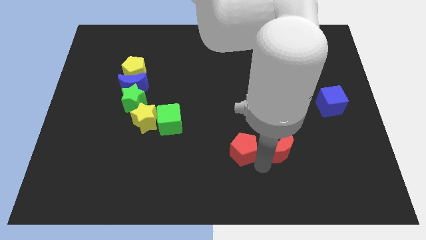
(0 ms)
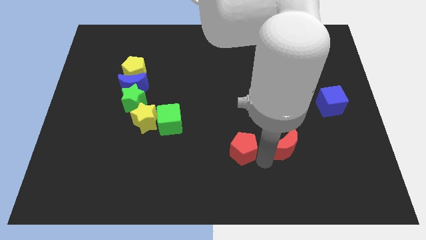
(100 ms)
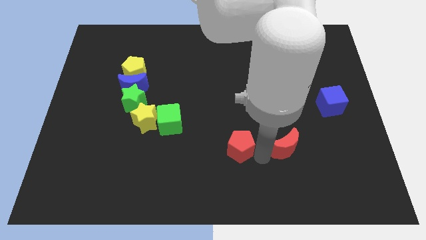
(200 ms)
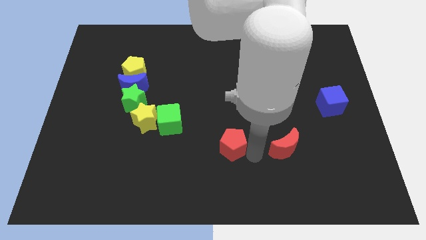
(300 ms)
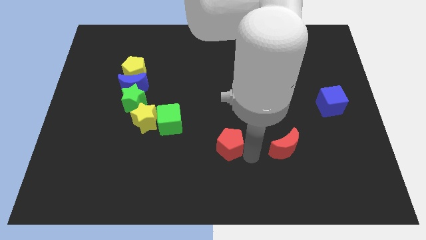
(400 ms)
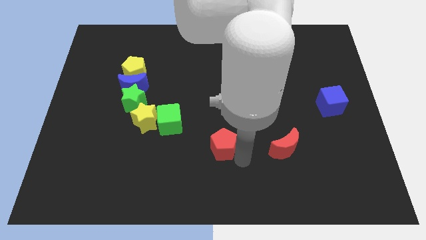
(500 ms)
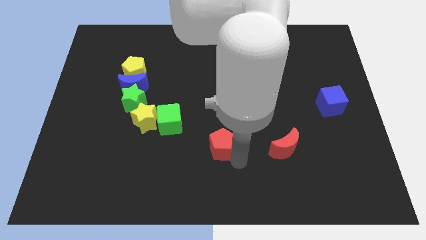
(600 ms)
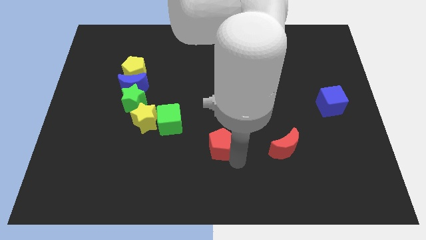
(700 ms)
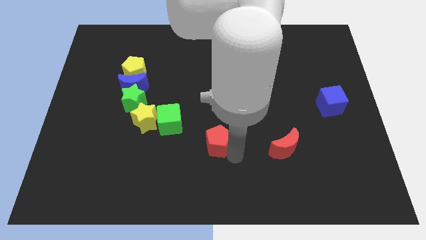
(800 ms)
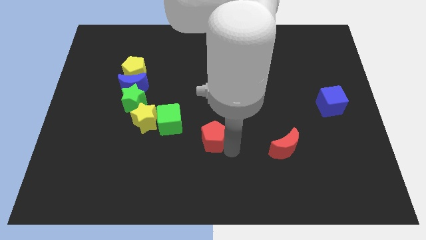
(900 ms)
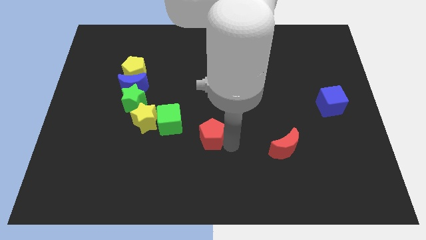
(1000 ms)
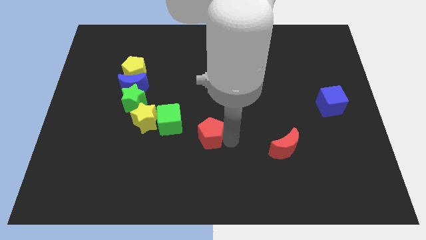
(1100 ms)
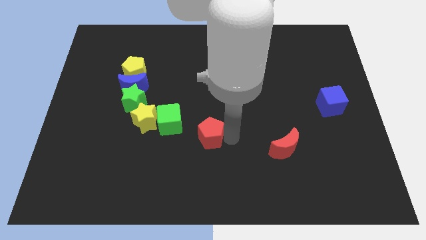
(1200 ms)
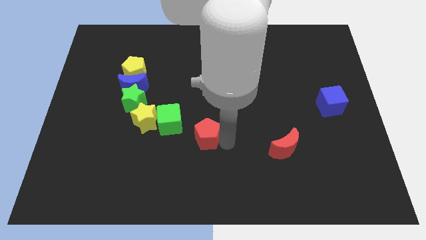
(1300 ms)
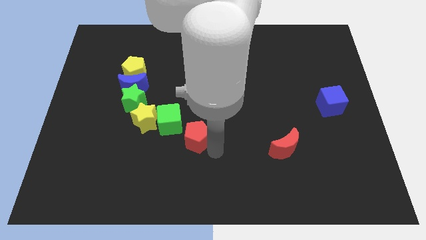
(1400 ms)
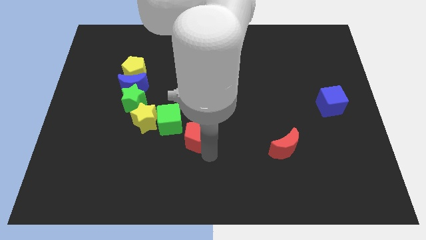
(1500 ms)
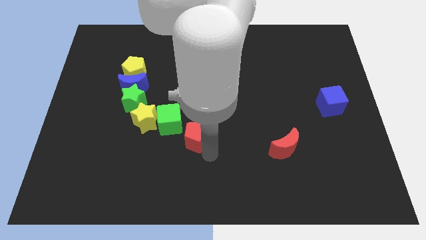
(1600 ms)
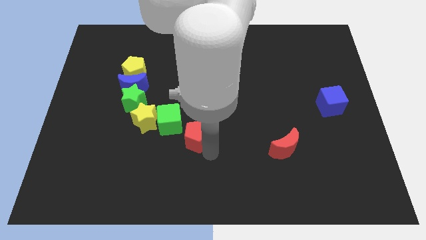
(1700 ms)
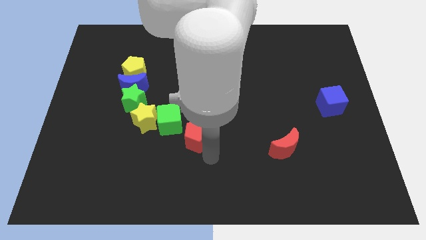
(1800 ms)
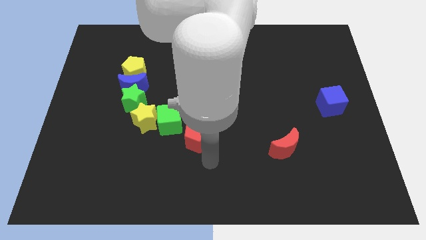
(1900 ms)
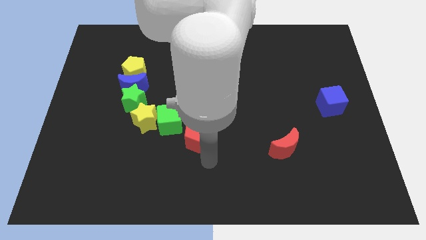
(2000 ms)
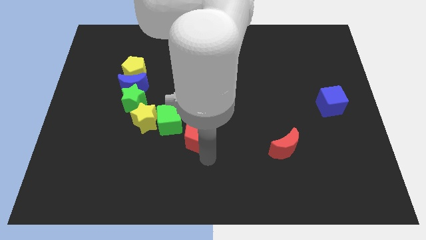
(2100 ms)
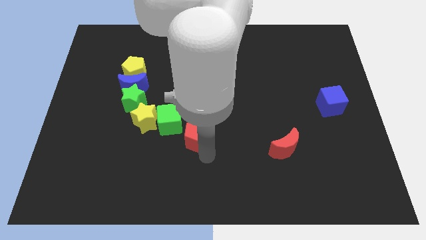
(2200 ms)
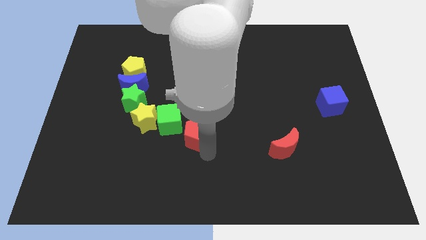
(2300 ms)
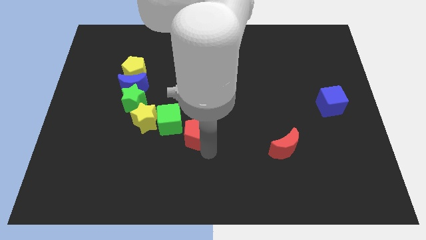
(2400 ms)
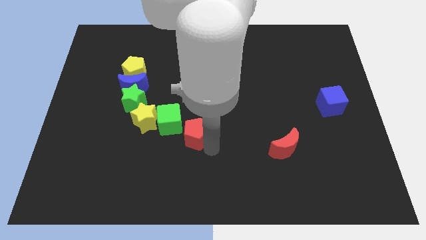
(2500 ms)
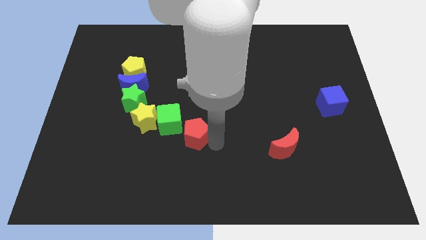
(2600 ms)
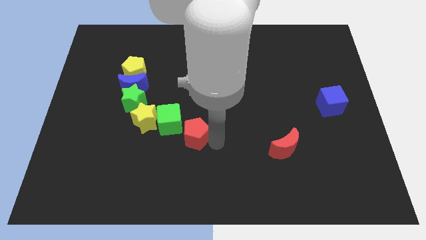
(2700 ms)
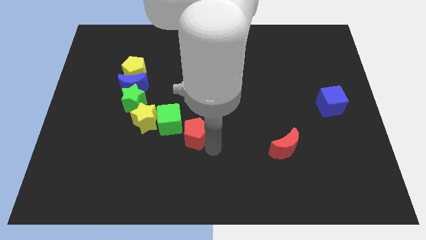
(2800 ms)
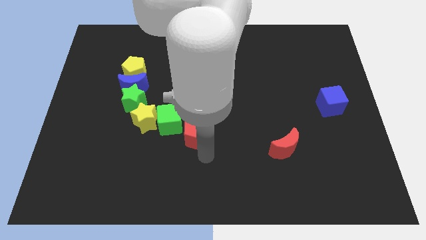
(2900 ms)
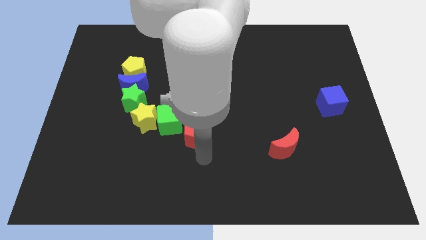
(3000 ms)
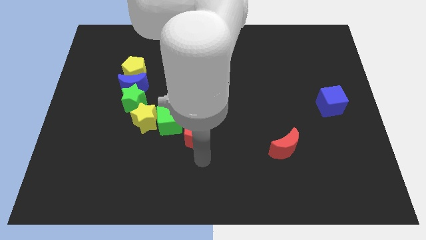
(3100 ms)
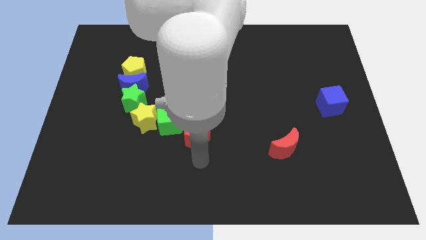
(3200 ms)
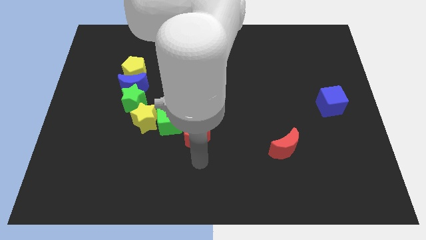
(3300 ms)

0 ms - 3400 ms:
place the red pentagon at the bottom right side of the green cube

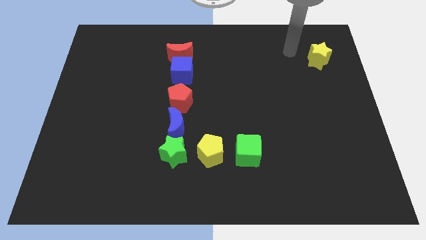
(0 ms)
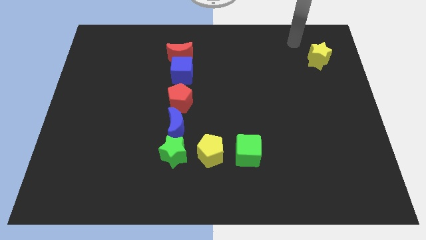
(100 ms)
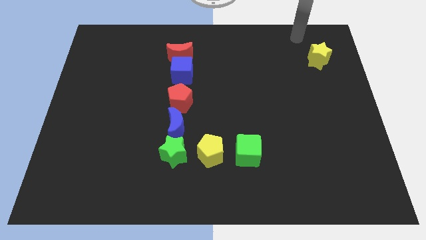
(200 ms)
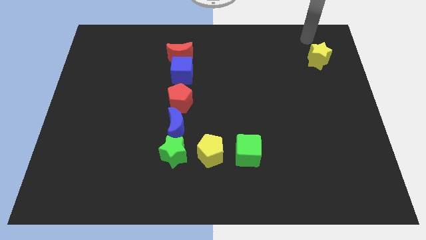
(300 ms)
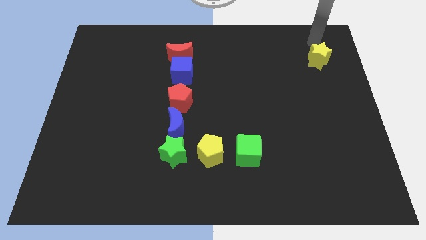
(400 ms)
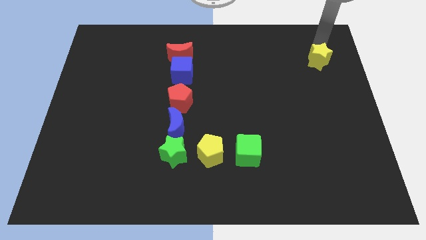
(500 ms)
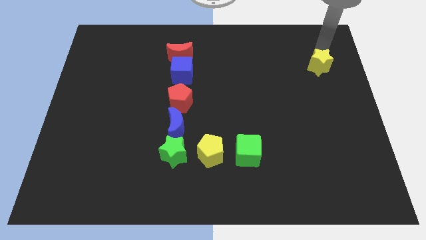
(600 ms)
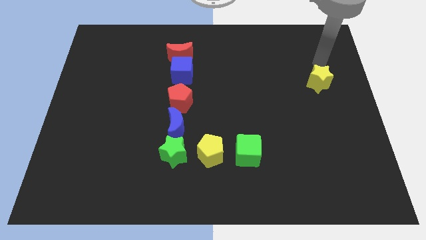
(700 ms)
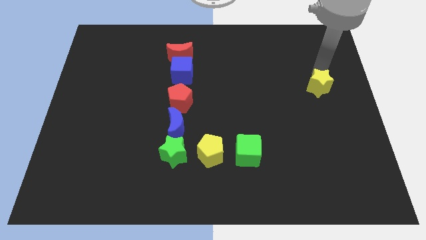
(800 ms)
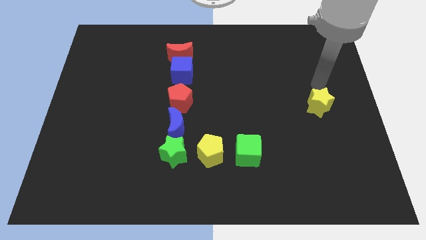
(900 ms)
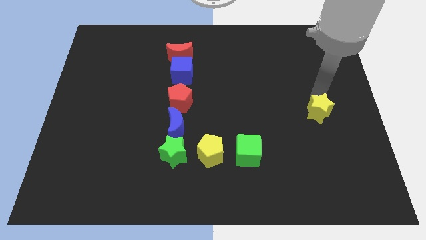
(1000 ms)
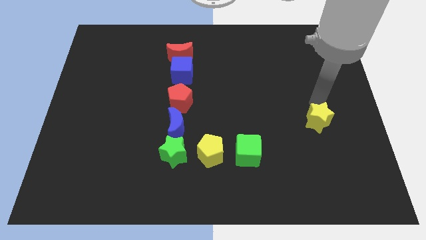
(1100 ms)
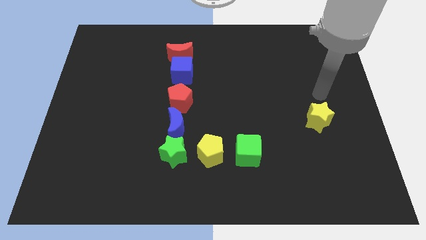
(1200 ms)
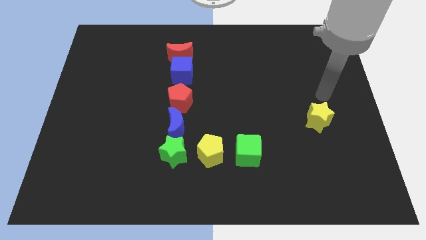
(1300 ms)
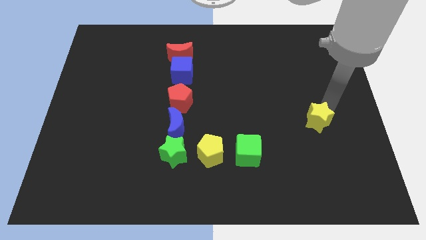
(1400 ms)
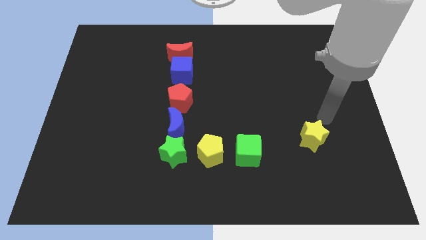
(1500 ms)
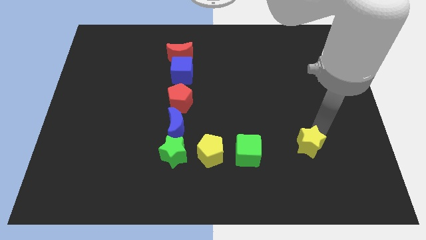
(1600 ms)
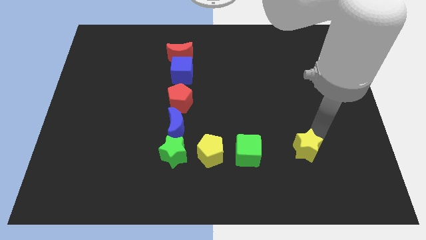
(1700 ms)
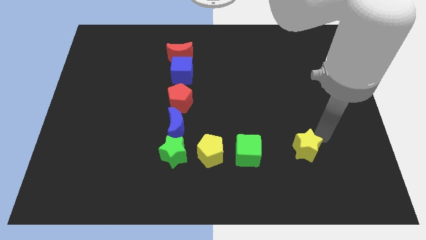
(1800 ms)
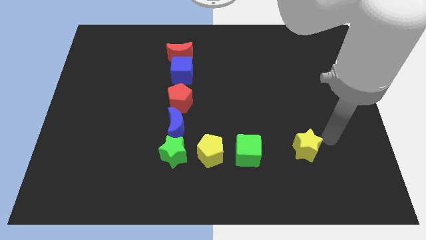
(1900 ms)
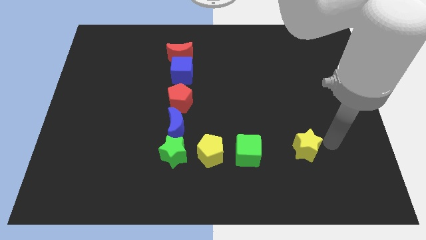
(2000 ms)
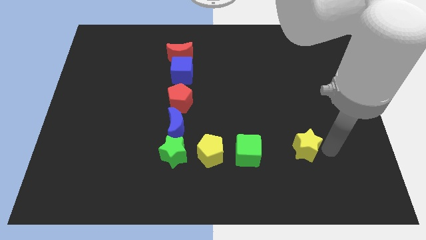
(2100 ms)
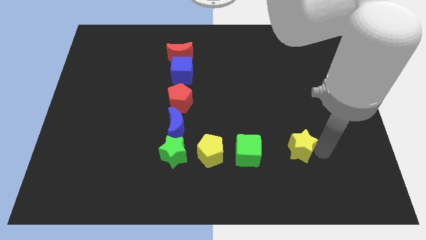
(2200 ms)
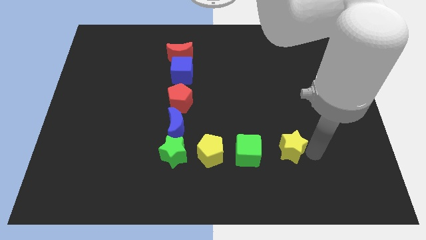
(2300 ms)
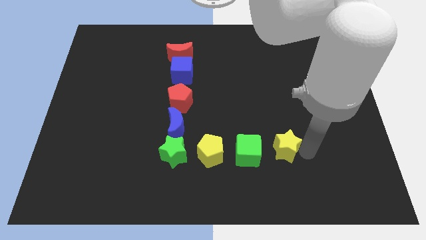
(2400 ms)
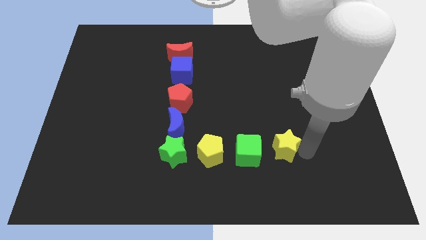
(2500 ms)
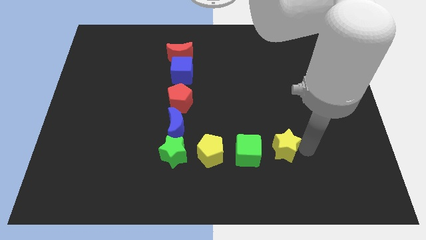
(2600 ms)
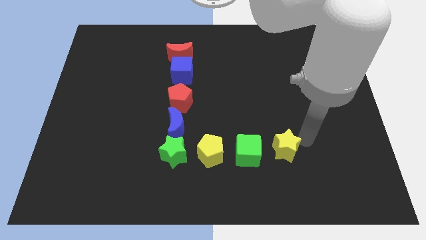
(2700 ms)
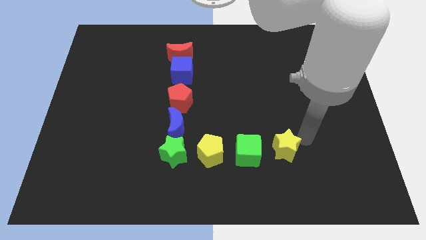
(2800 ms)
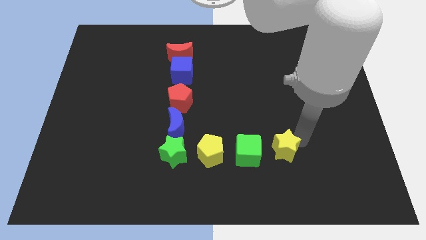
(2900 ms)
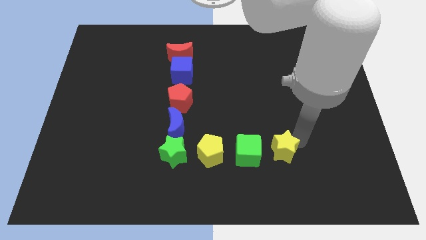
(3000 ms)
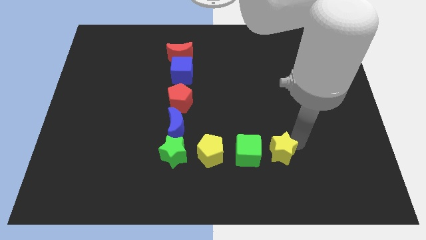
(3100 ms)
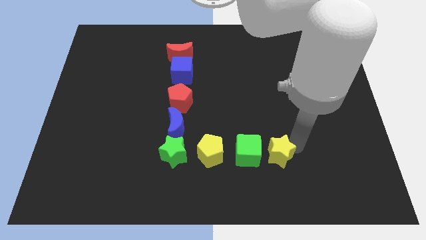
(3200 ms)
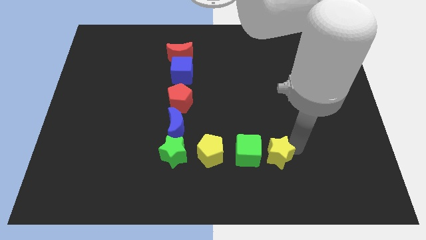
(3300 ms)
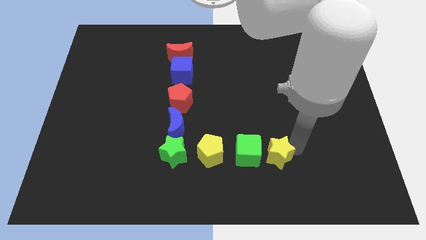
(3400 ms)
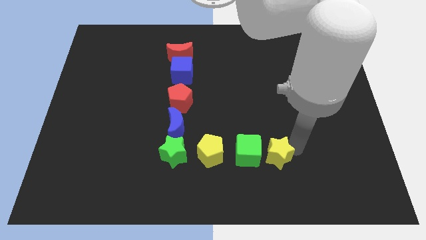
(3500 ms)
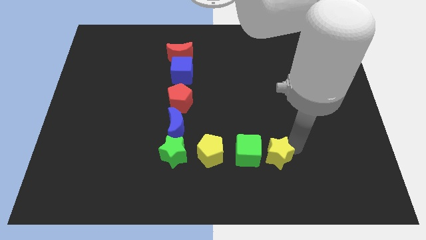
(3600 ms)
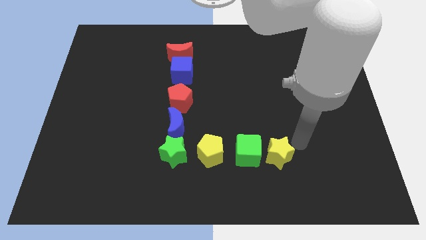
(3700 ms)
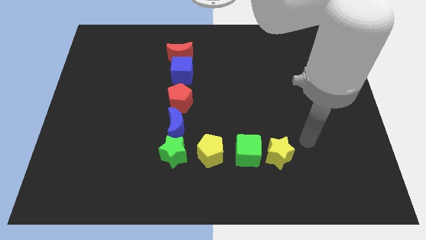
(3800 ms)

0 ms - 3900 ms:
push the yellow star to the right of the green cube

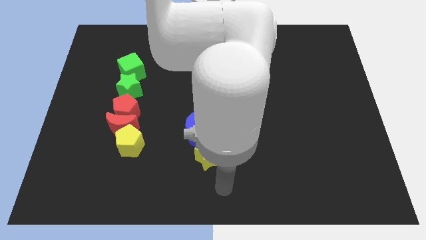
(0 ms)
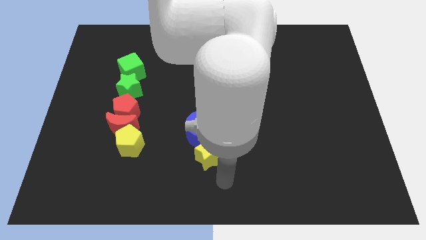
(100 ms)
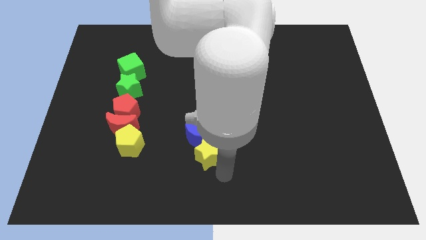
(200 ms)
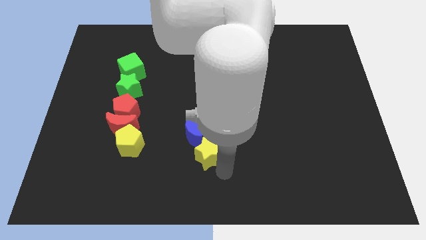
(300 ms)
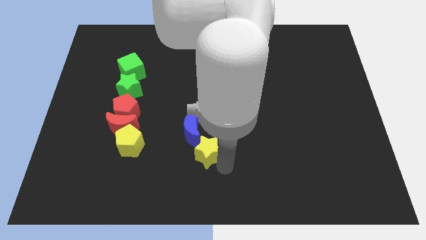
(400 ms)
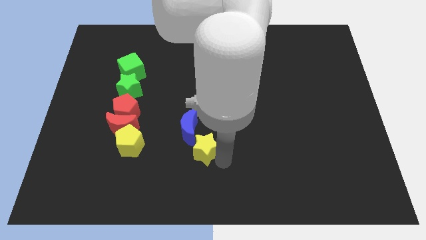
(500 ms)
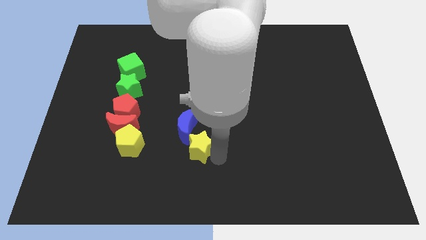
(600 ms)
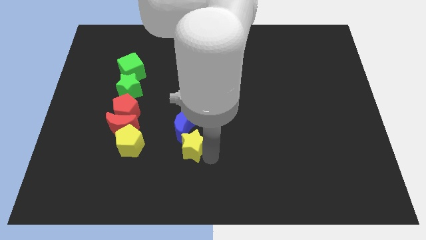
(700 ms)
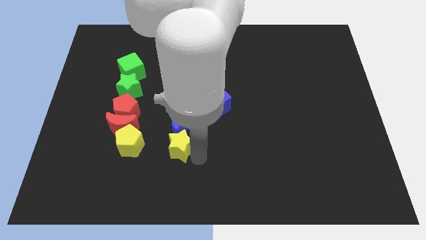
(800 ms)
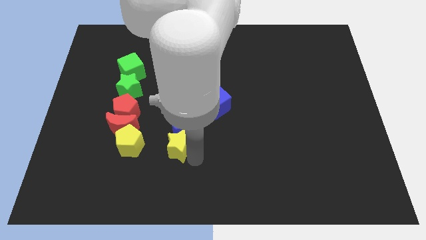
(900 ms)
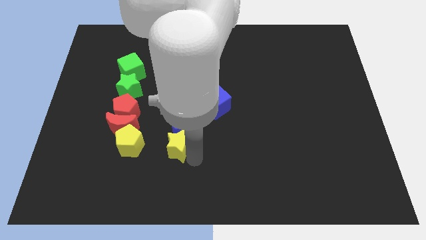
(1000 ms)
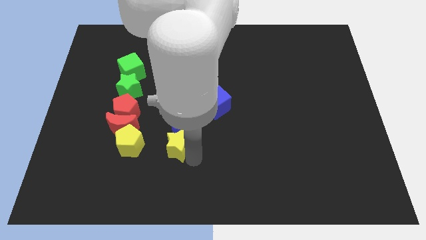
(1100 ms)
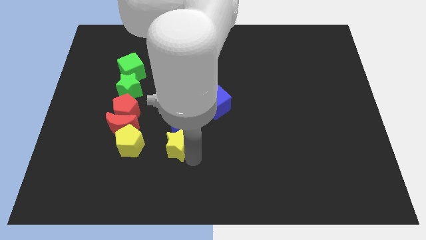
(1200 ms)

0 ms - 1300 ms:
drag the yellow star to the left

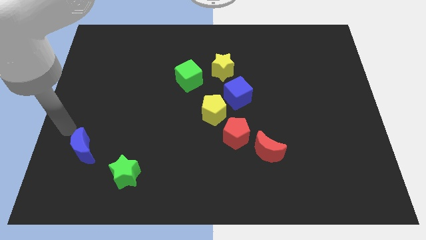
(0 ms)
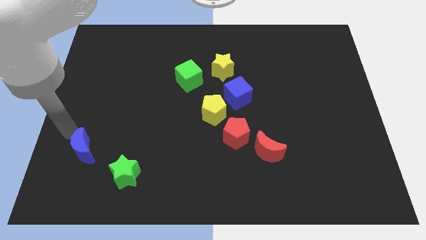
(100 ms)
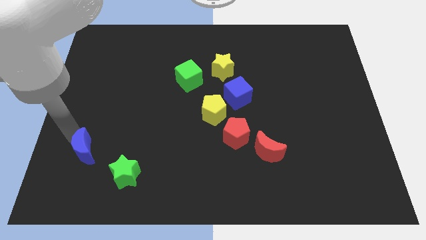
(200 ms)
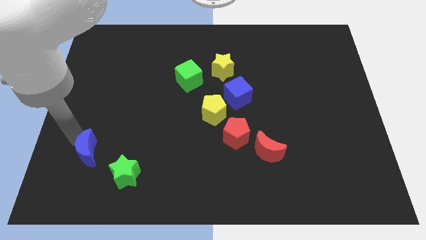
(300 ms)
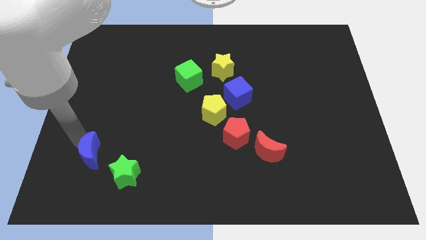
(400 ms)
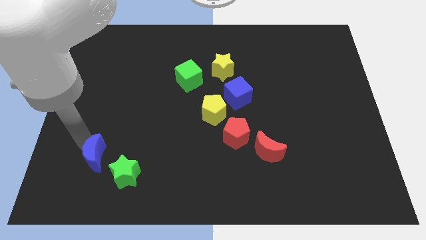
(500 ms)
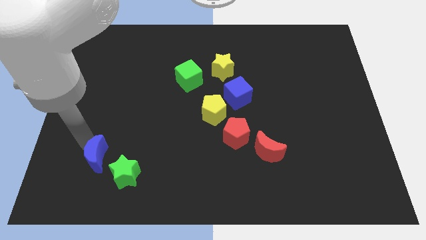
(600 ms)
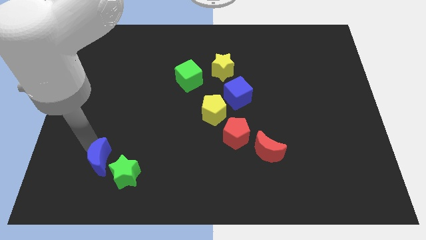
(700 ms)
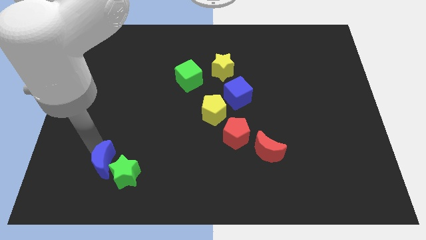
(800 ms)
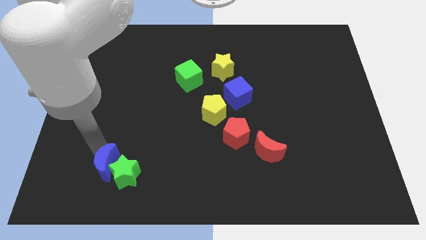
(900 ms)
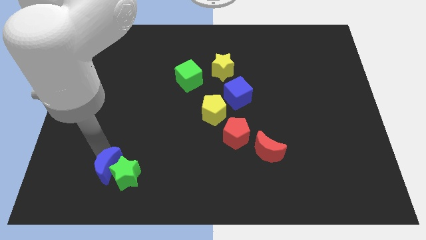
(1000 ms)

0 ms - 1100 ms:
push the blue moon into the green star
